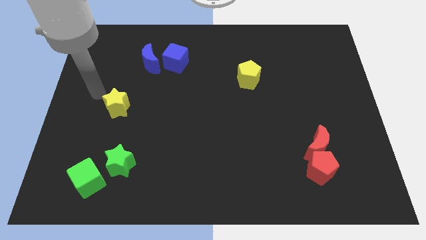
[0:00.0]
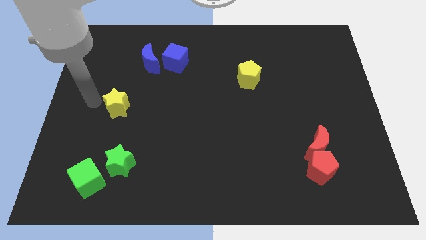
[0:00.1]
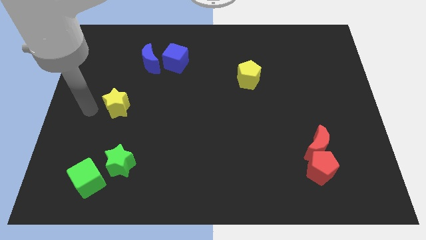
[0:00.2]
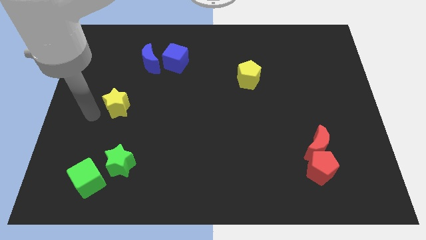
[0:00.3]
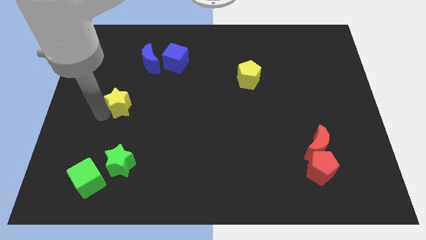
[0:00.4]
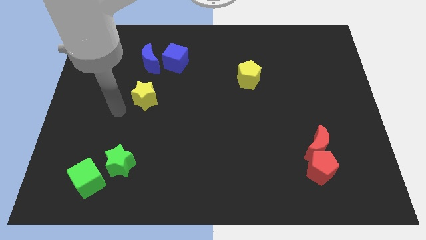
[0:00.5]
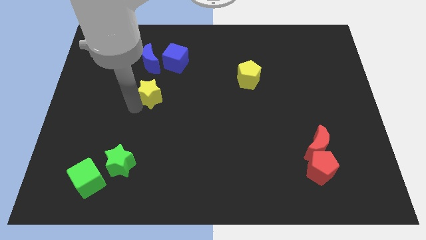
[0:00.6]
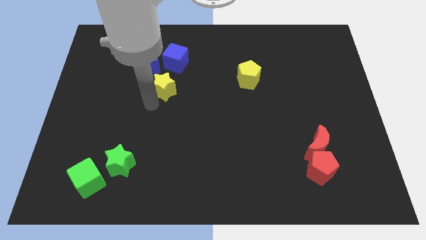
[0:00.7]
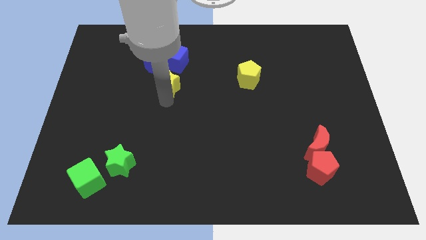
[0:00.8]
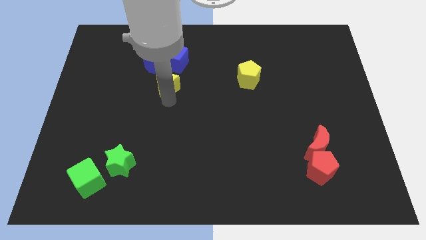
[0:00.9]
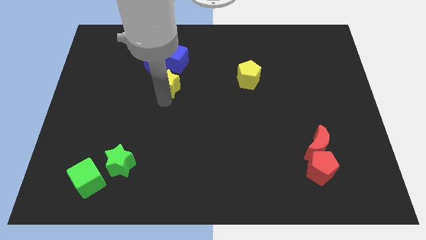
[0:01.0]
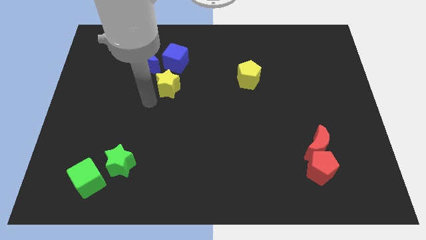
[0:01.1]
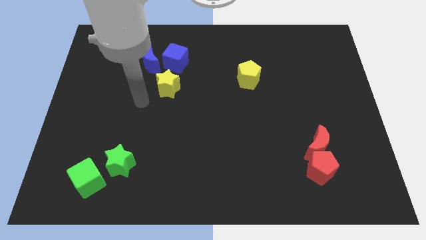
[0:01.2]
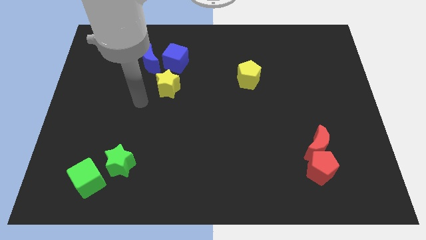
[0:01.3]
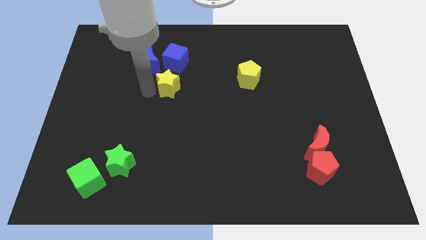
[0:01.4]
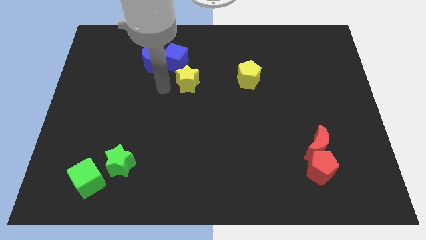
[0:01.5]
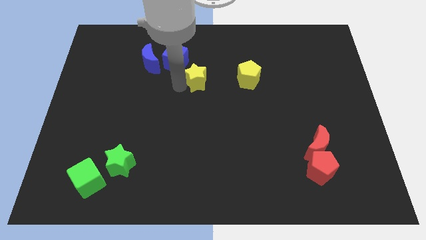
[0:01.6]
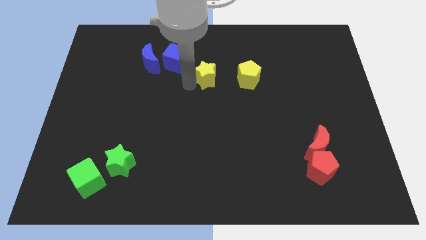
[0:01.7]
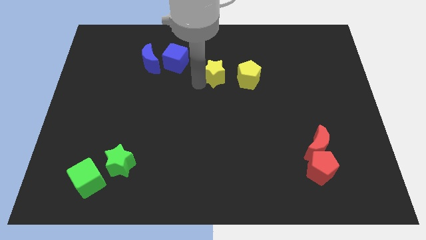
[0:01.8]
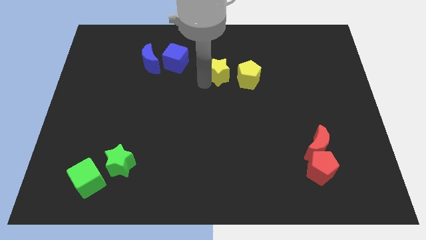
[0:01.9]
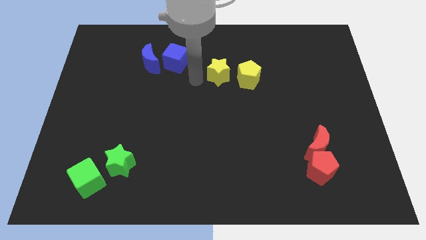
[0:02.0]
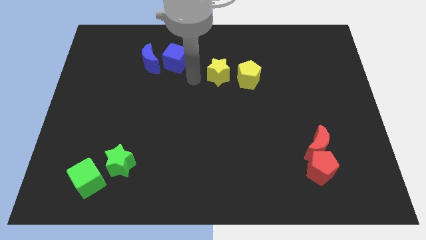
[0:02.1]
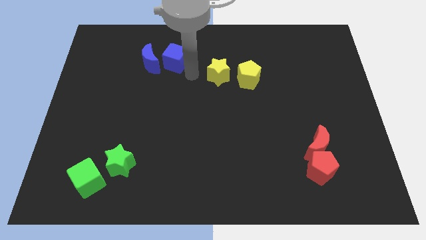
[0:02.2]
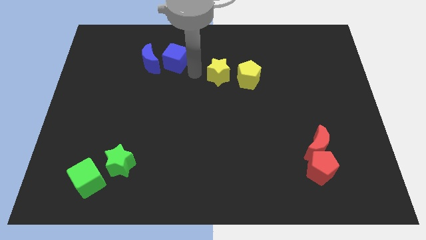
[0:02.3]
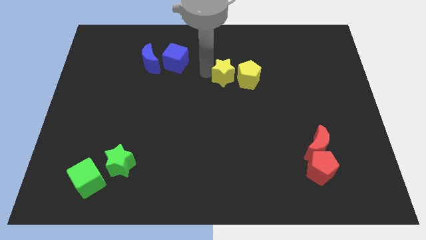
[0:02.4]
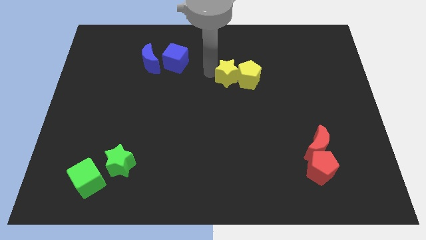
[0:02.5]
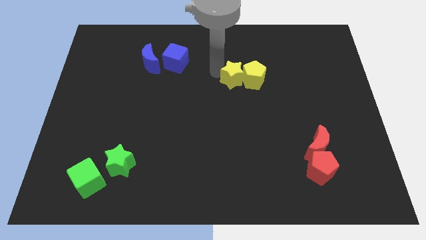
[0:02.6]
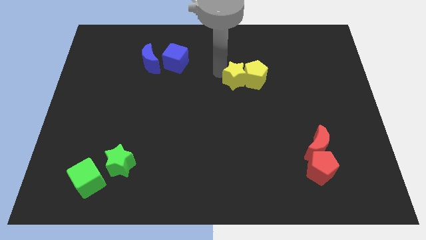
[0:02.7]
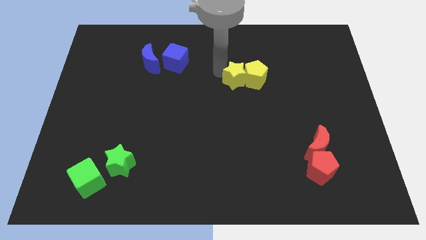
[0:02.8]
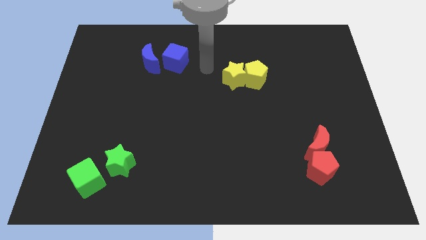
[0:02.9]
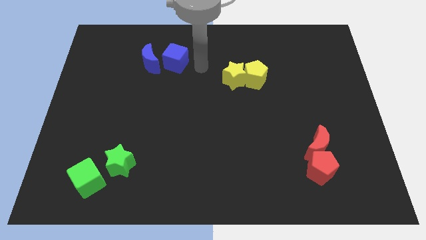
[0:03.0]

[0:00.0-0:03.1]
push yellow star into yellow pentagon

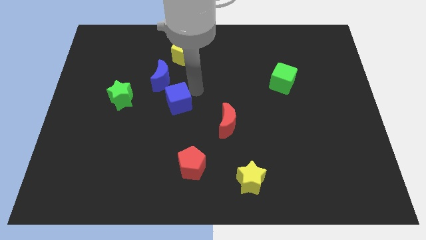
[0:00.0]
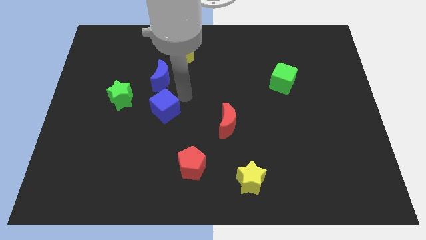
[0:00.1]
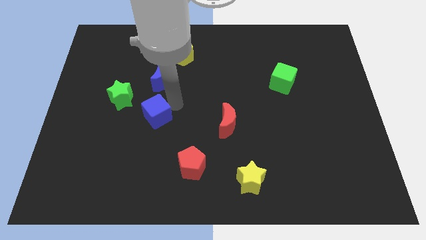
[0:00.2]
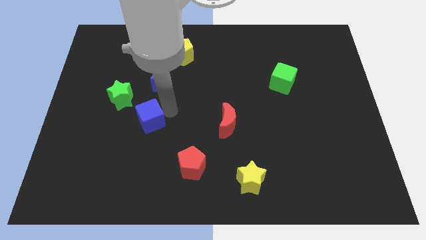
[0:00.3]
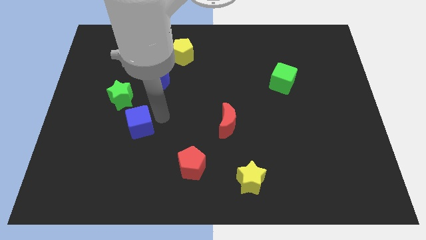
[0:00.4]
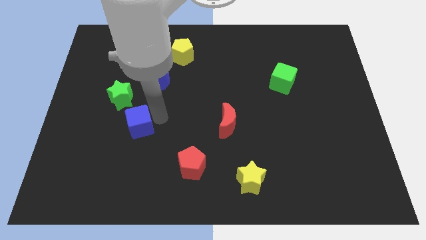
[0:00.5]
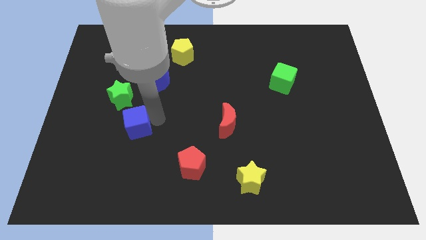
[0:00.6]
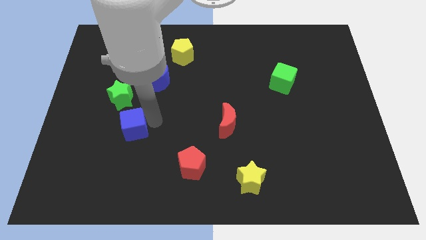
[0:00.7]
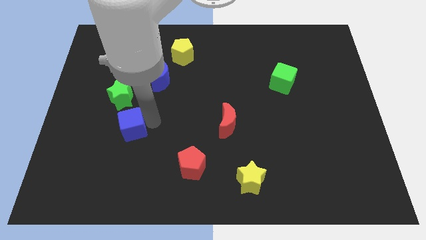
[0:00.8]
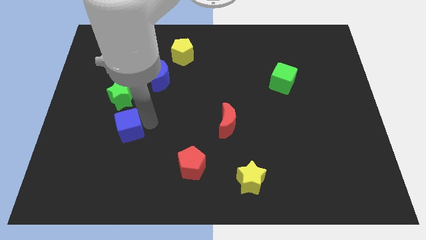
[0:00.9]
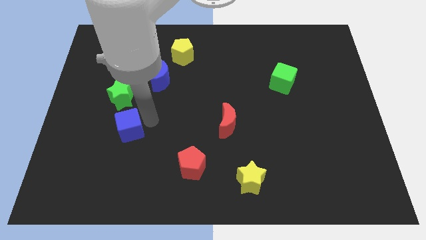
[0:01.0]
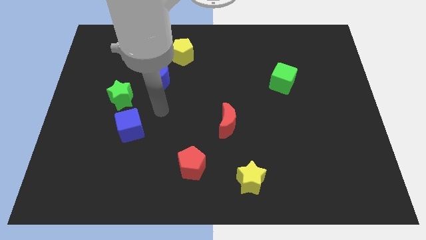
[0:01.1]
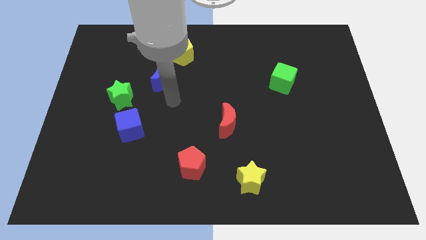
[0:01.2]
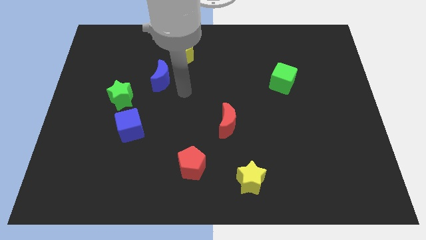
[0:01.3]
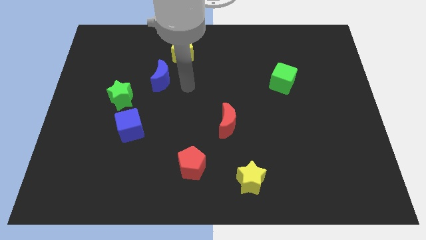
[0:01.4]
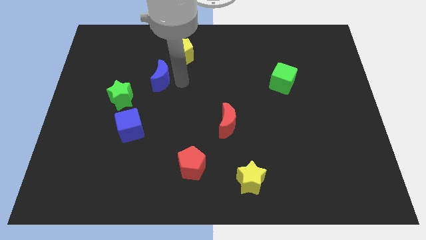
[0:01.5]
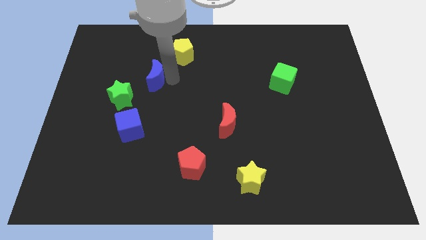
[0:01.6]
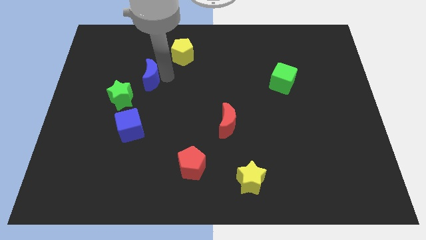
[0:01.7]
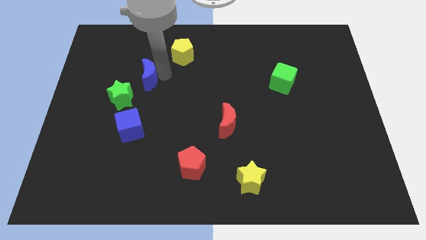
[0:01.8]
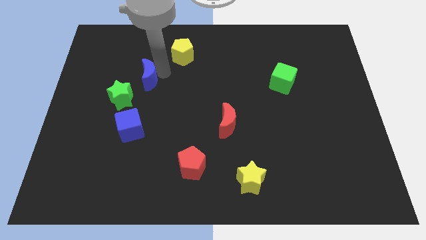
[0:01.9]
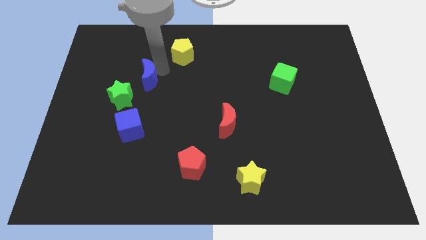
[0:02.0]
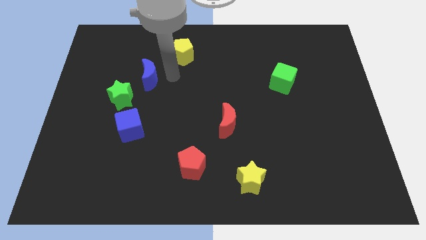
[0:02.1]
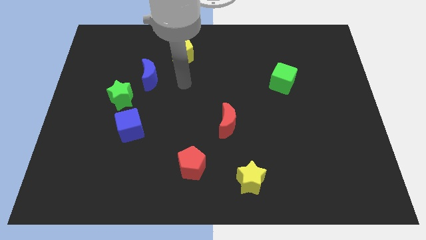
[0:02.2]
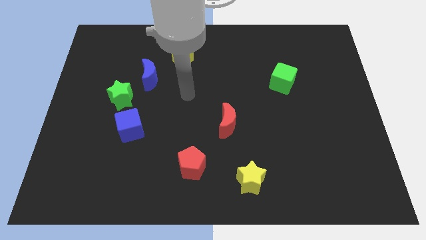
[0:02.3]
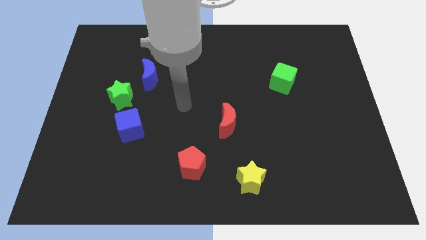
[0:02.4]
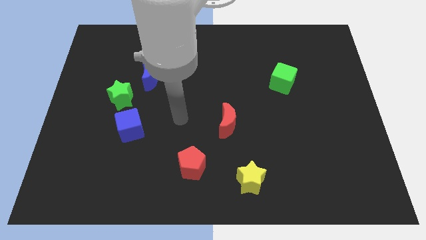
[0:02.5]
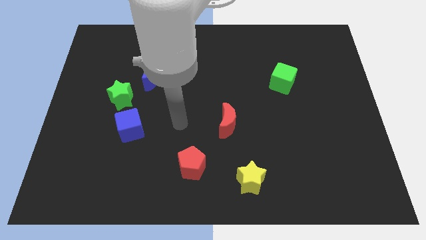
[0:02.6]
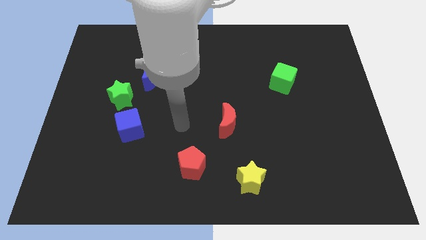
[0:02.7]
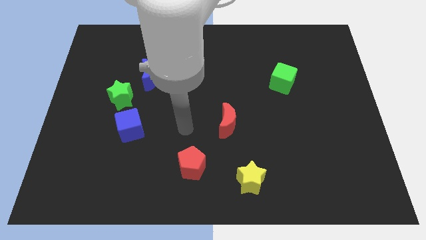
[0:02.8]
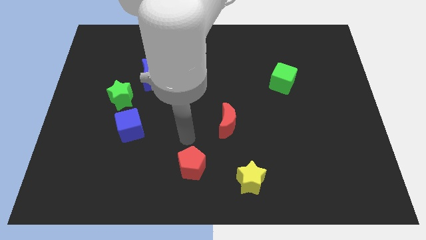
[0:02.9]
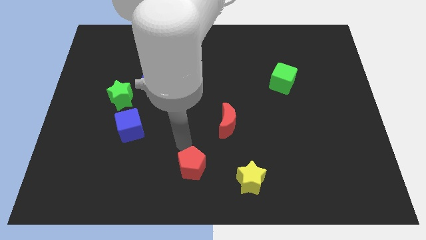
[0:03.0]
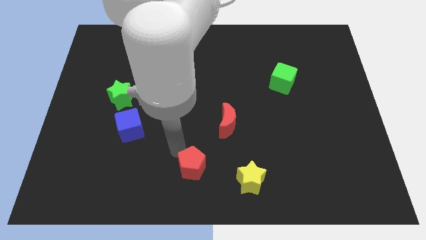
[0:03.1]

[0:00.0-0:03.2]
move the blue cube below the green star

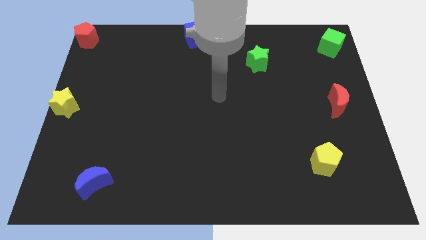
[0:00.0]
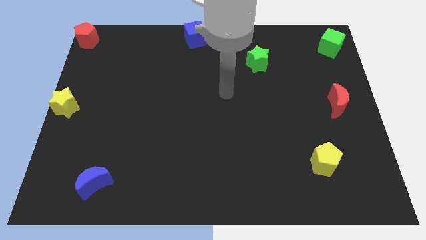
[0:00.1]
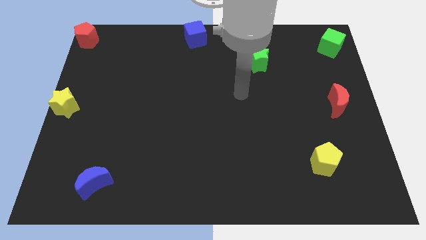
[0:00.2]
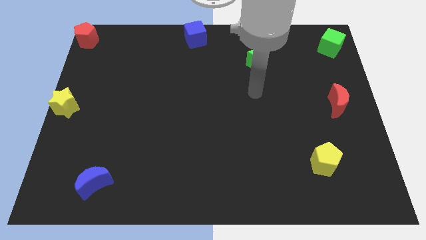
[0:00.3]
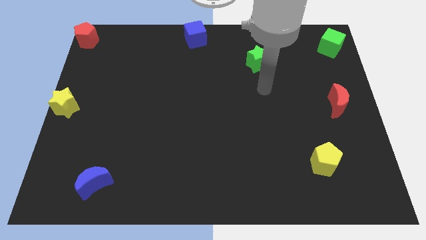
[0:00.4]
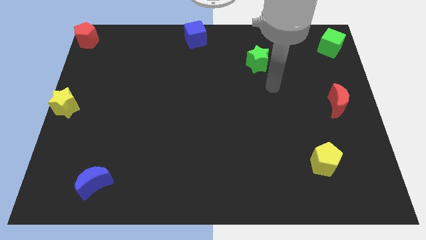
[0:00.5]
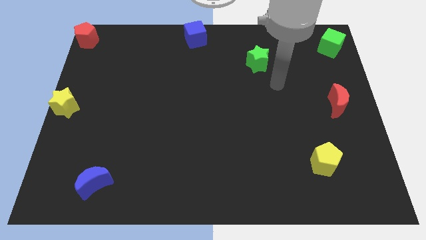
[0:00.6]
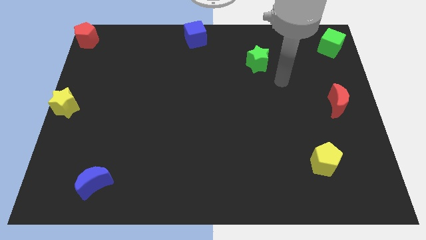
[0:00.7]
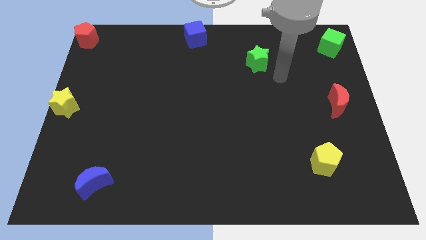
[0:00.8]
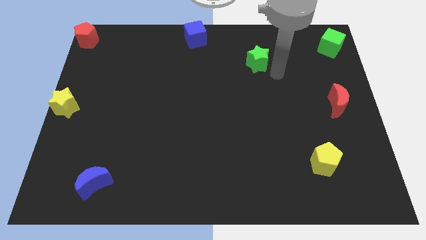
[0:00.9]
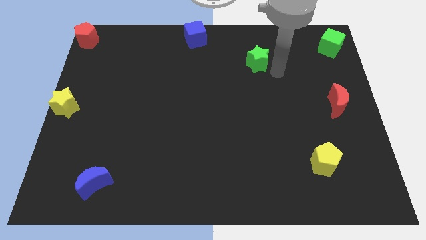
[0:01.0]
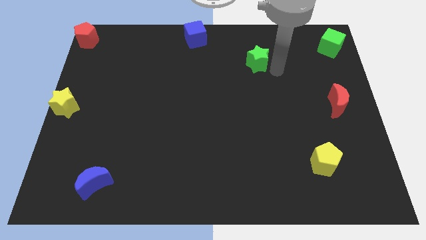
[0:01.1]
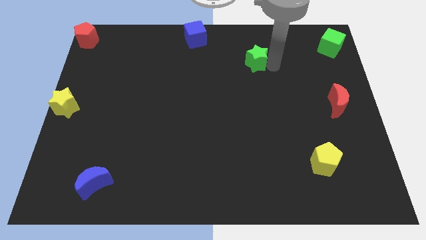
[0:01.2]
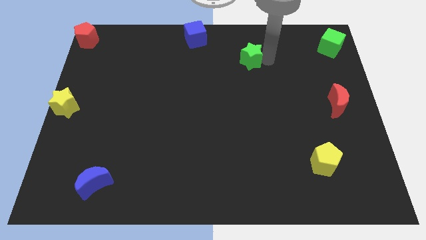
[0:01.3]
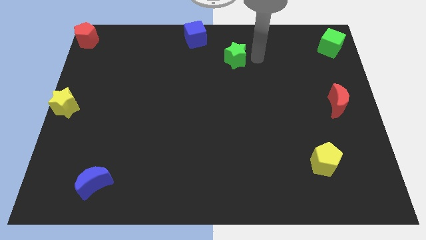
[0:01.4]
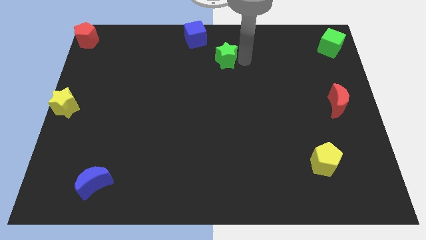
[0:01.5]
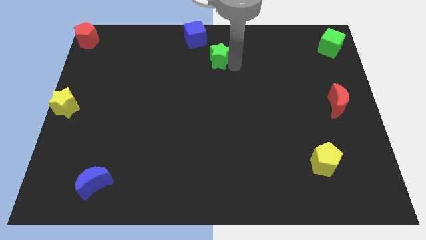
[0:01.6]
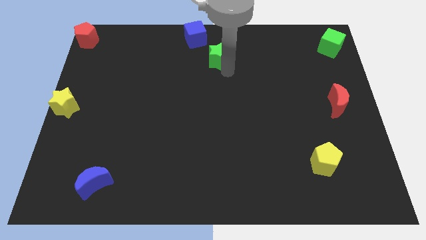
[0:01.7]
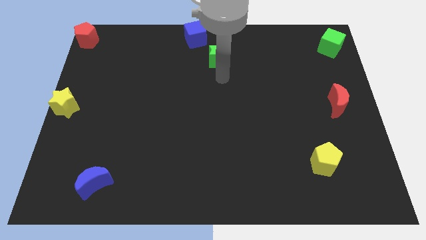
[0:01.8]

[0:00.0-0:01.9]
push the green star towards the blue cube

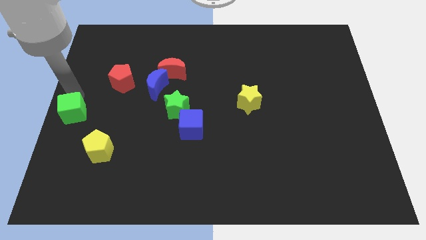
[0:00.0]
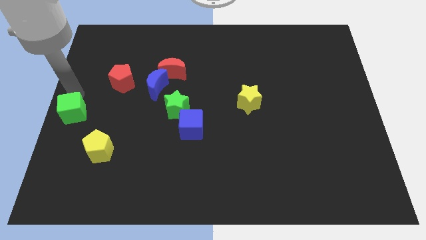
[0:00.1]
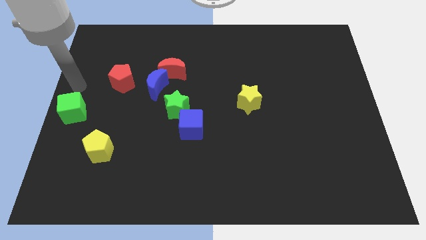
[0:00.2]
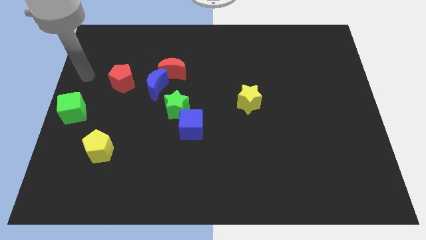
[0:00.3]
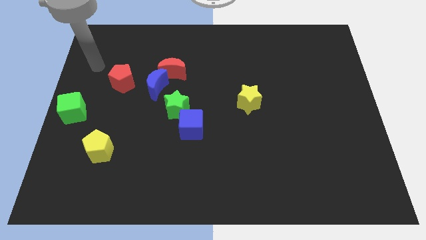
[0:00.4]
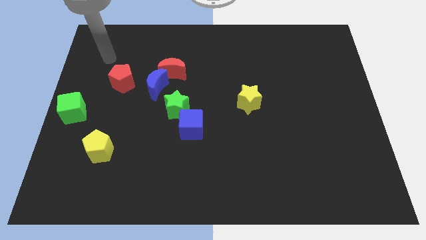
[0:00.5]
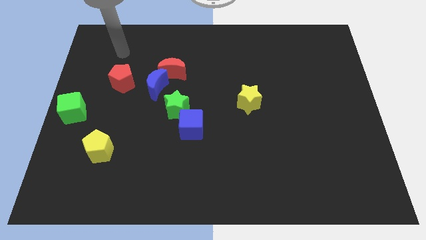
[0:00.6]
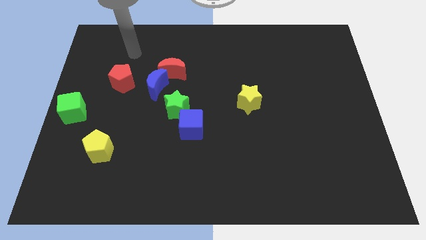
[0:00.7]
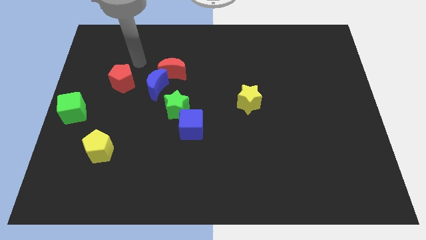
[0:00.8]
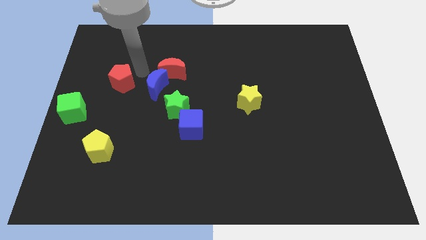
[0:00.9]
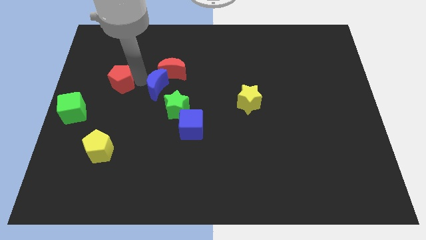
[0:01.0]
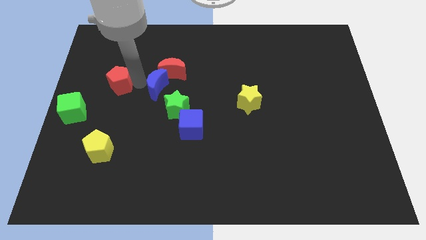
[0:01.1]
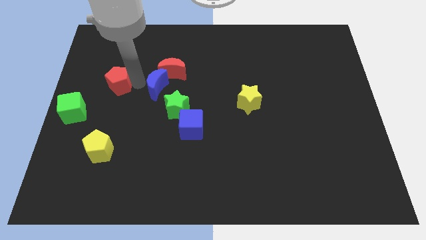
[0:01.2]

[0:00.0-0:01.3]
place the arm right to the red pentagon
